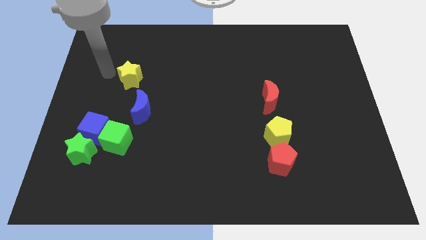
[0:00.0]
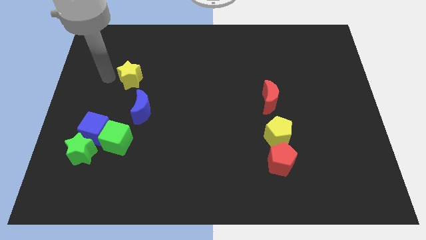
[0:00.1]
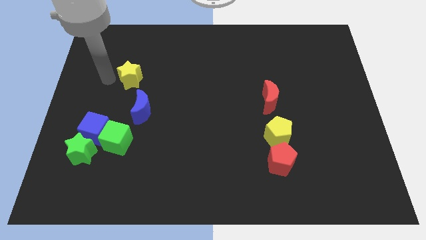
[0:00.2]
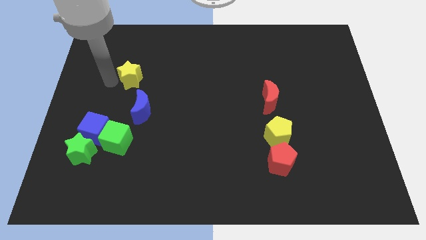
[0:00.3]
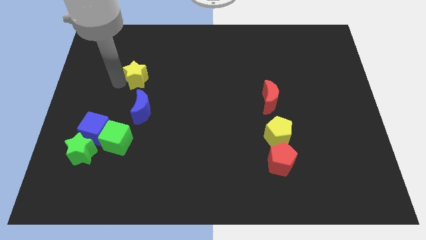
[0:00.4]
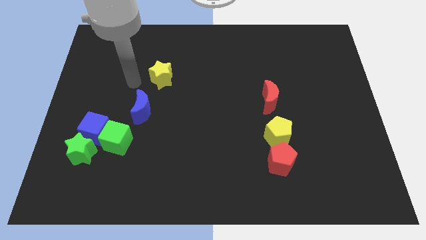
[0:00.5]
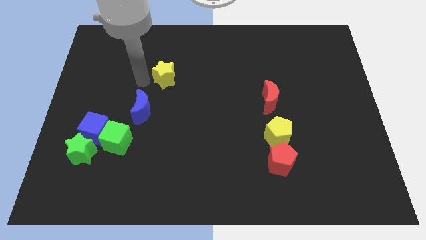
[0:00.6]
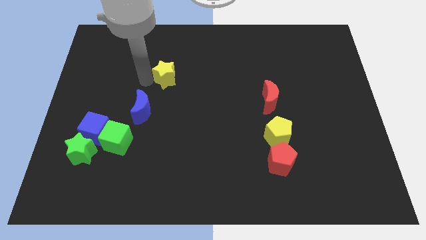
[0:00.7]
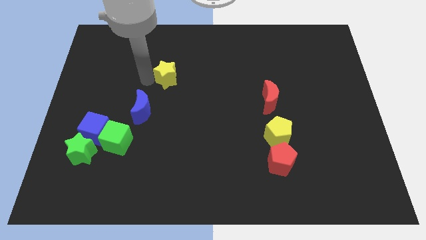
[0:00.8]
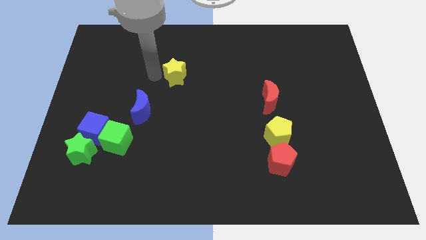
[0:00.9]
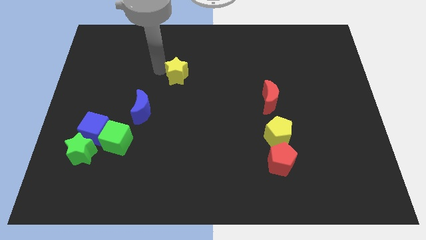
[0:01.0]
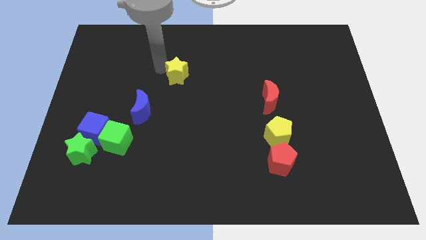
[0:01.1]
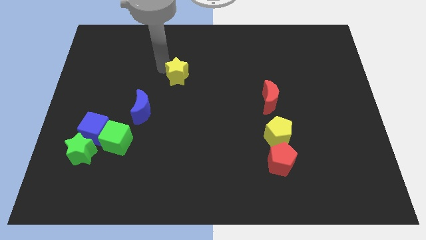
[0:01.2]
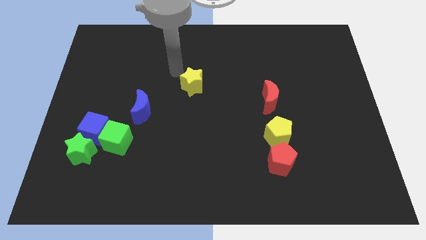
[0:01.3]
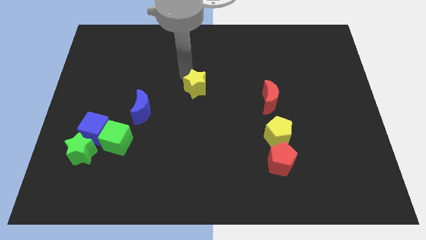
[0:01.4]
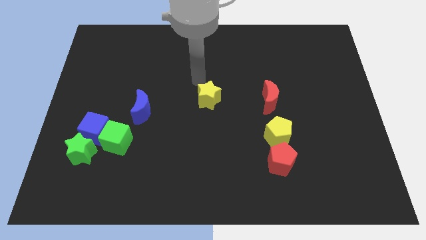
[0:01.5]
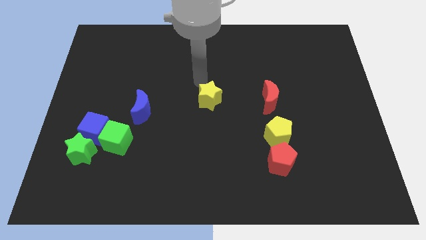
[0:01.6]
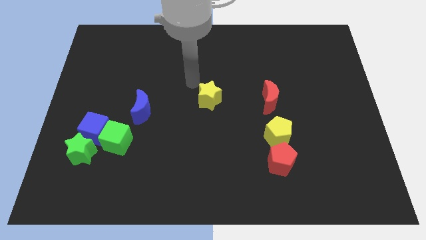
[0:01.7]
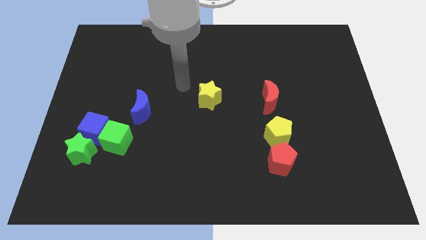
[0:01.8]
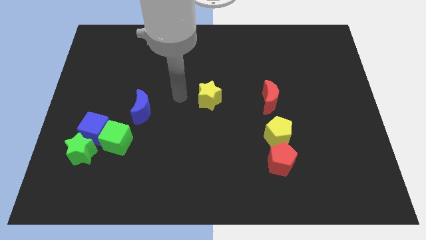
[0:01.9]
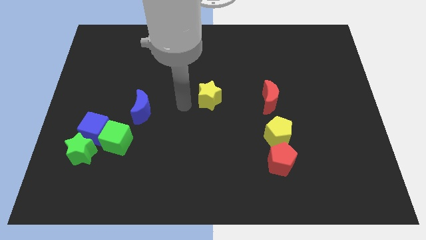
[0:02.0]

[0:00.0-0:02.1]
move the yellow star to the center of the board

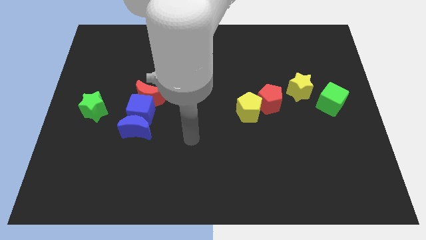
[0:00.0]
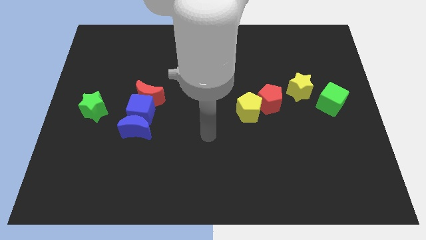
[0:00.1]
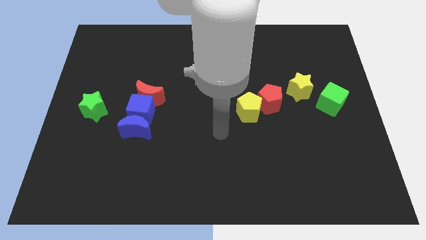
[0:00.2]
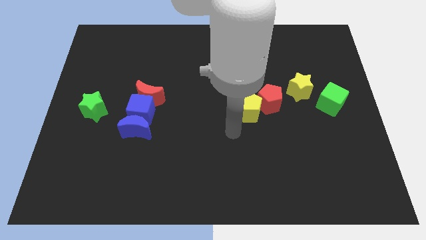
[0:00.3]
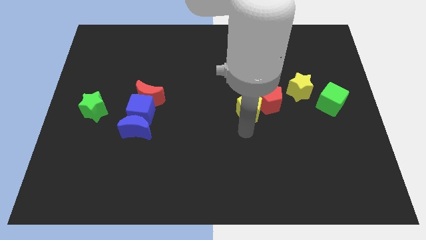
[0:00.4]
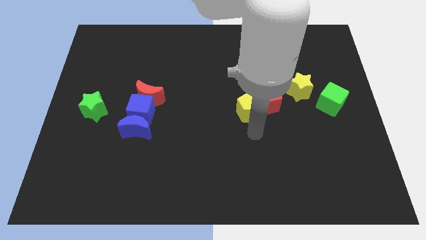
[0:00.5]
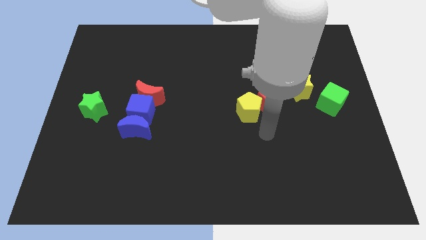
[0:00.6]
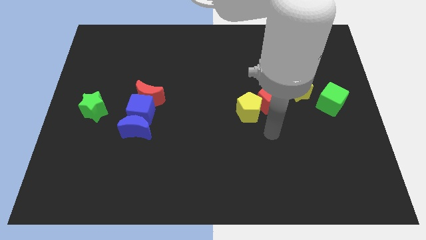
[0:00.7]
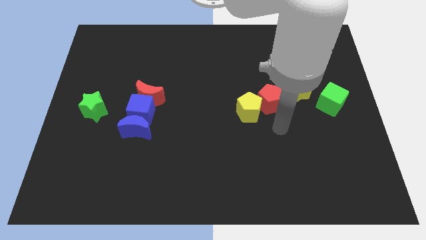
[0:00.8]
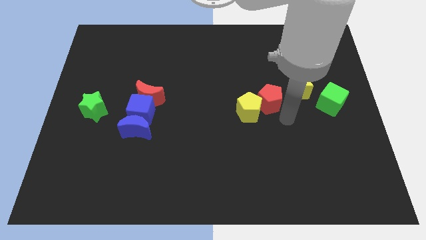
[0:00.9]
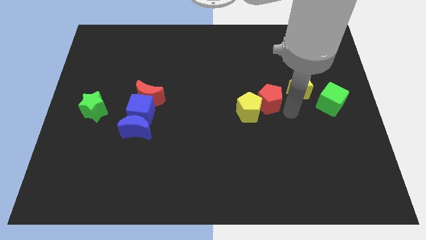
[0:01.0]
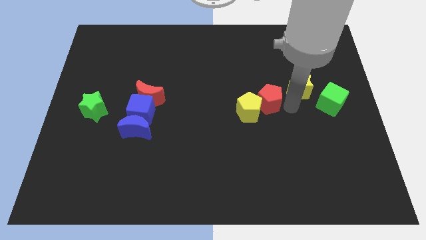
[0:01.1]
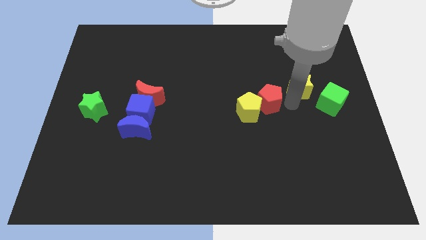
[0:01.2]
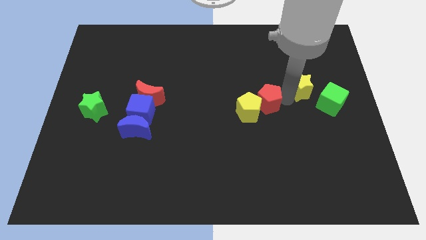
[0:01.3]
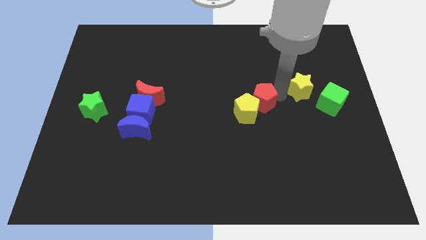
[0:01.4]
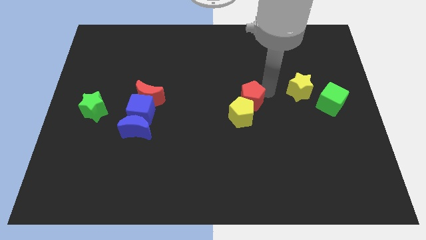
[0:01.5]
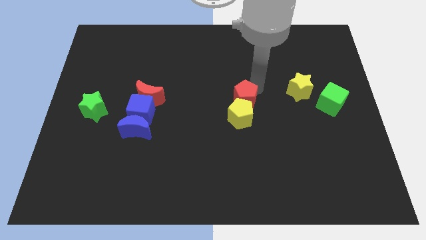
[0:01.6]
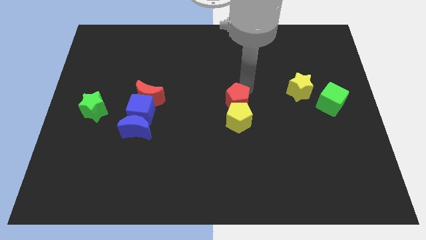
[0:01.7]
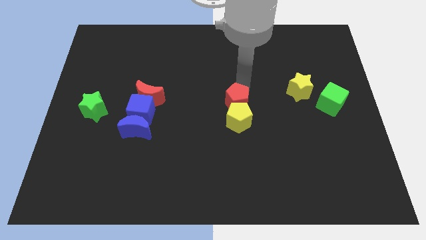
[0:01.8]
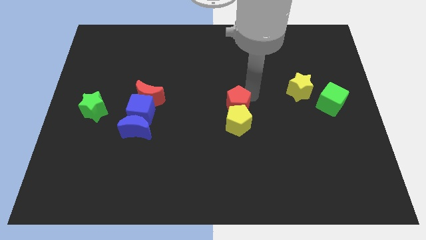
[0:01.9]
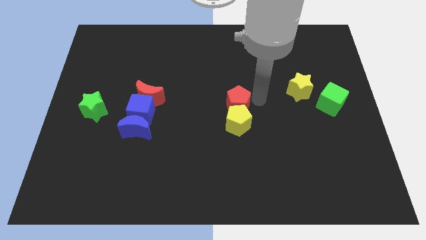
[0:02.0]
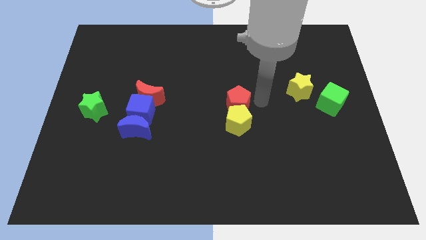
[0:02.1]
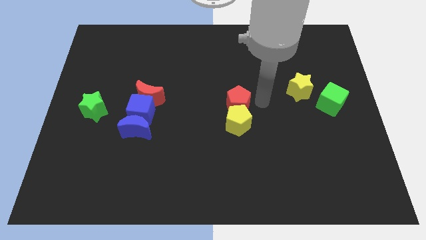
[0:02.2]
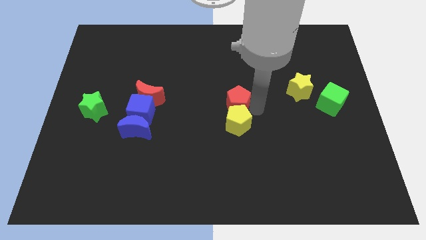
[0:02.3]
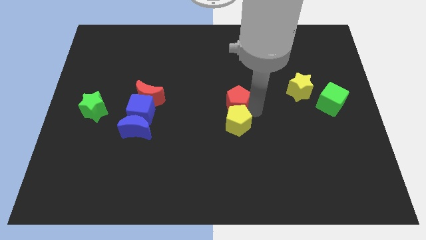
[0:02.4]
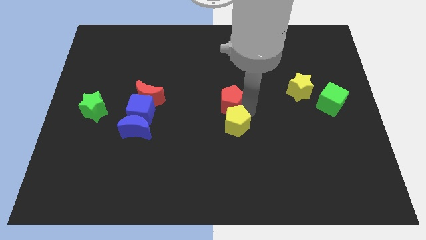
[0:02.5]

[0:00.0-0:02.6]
push the red pentagon away from yellow star

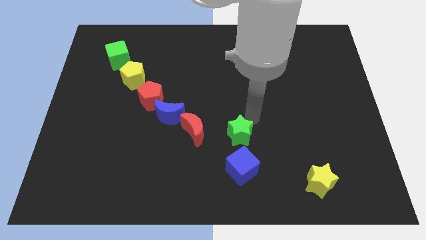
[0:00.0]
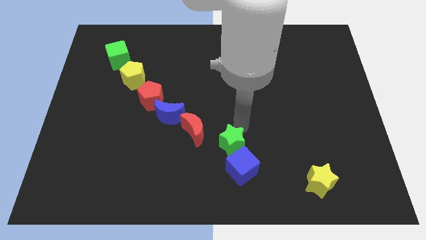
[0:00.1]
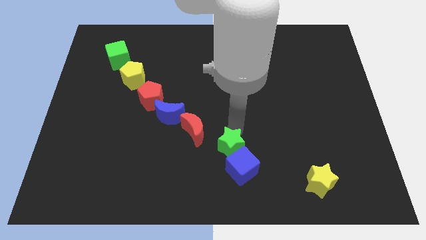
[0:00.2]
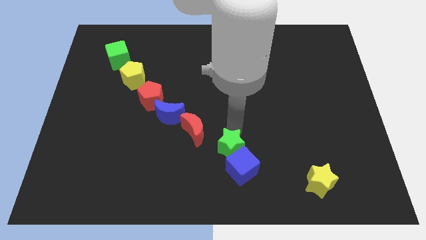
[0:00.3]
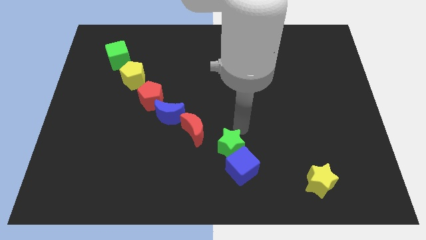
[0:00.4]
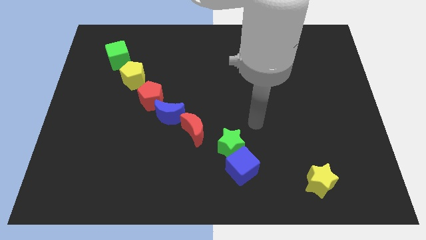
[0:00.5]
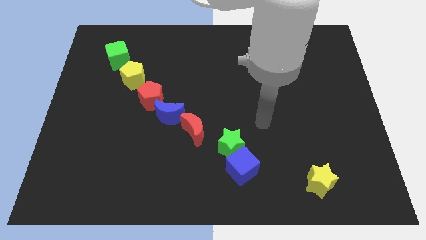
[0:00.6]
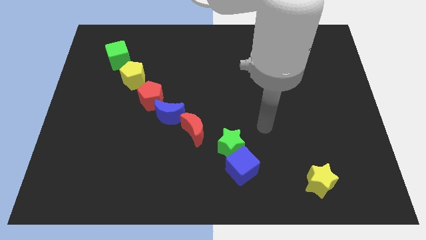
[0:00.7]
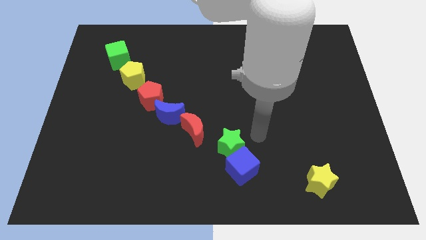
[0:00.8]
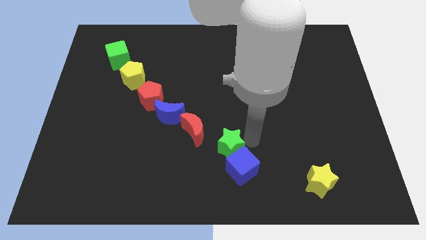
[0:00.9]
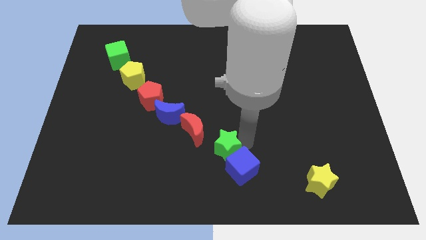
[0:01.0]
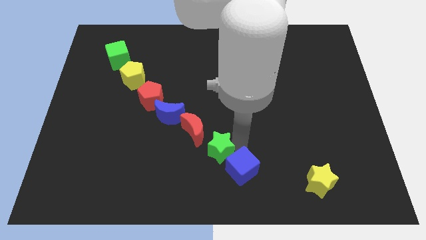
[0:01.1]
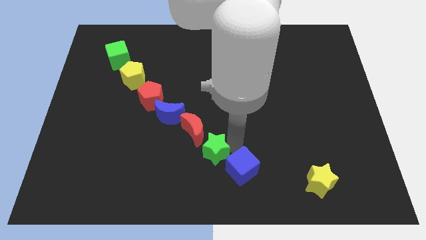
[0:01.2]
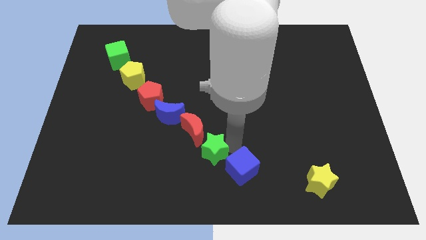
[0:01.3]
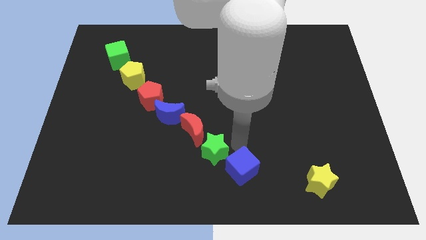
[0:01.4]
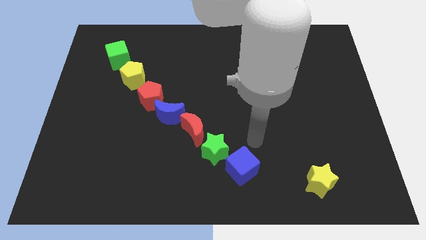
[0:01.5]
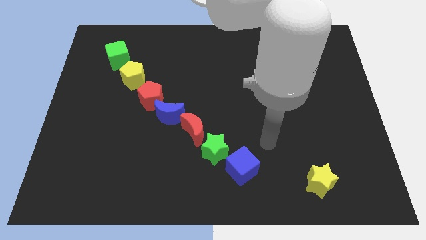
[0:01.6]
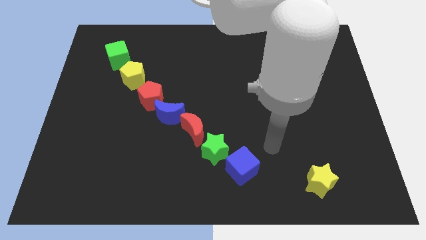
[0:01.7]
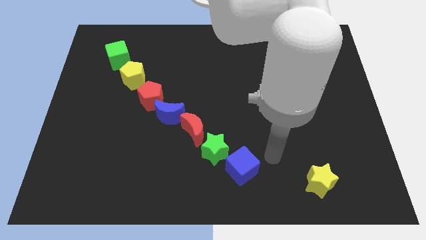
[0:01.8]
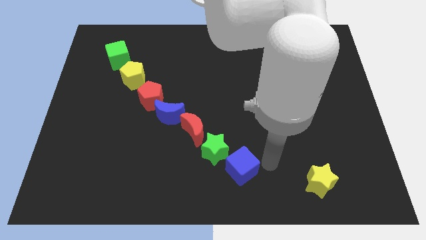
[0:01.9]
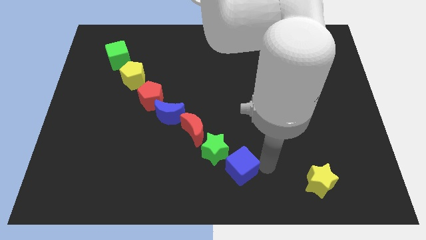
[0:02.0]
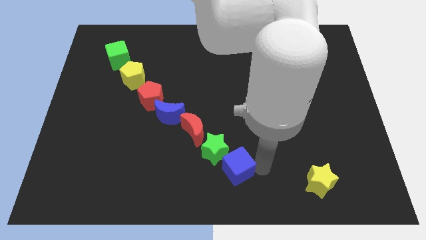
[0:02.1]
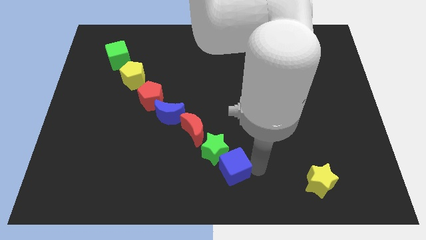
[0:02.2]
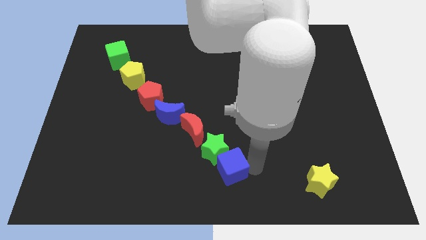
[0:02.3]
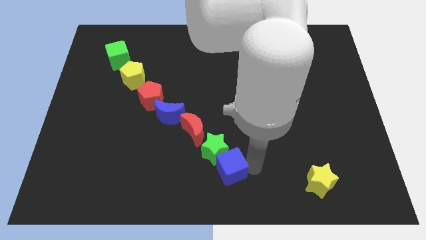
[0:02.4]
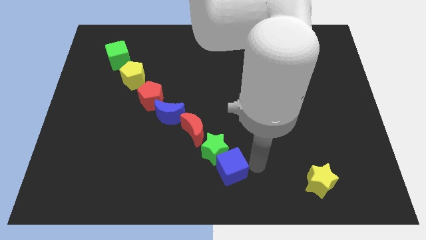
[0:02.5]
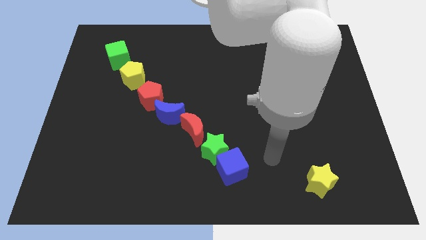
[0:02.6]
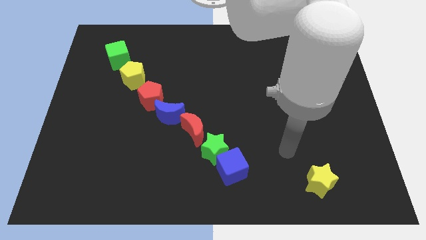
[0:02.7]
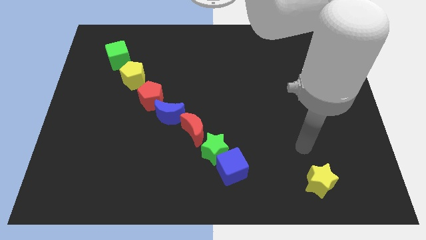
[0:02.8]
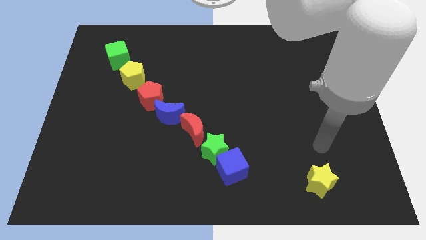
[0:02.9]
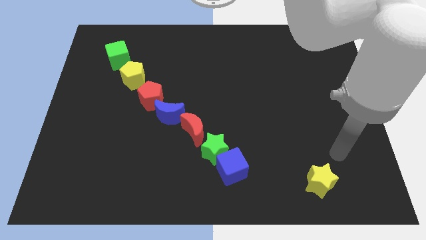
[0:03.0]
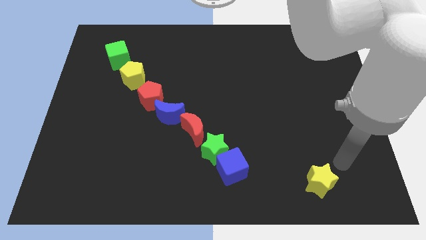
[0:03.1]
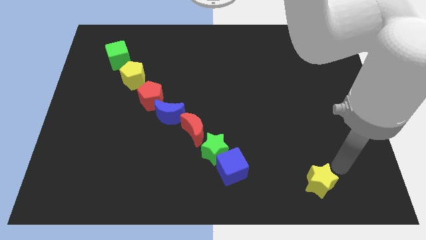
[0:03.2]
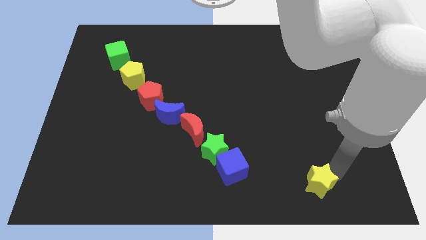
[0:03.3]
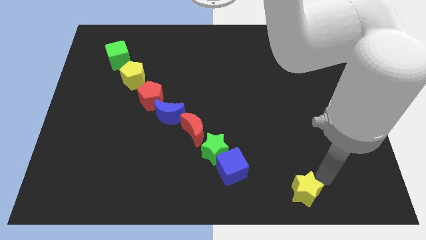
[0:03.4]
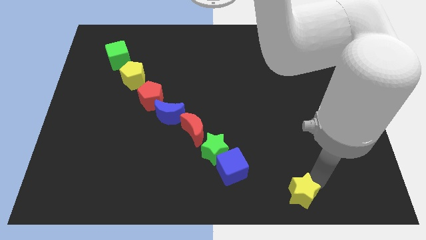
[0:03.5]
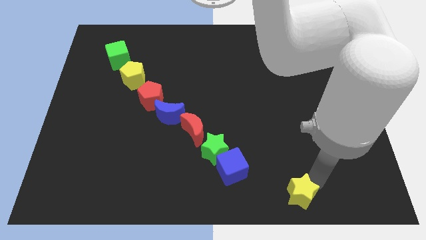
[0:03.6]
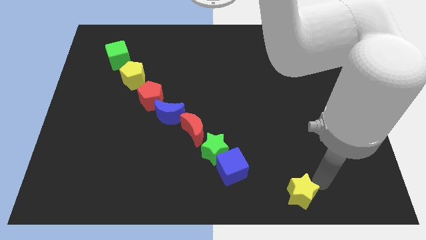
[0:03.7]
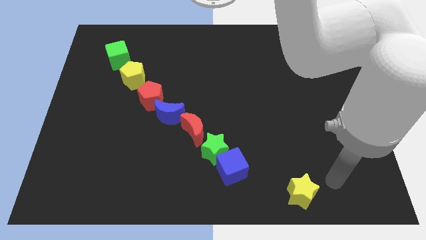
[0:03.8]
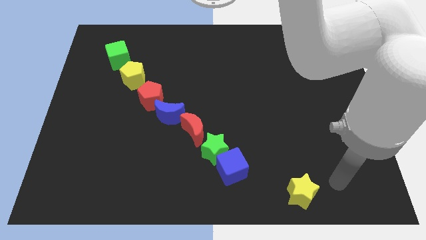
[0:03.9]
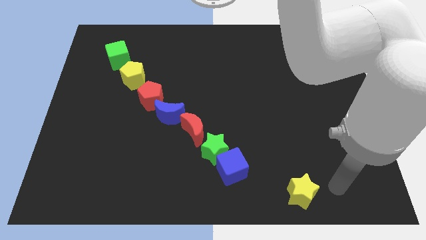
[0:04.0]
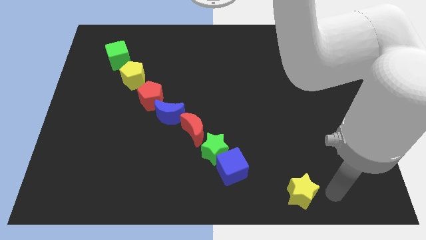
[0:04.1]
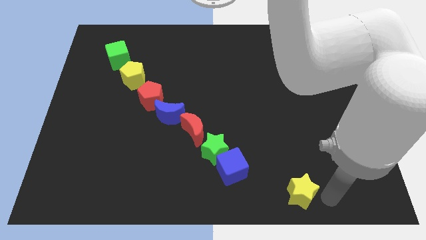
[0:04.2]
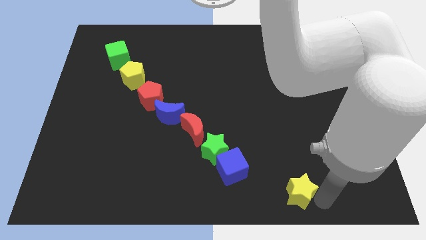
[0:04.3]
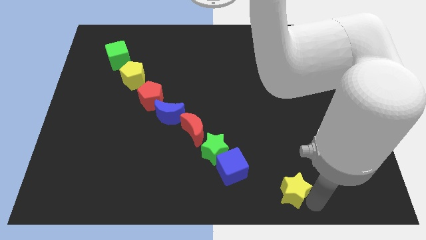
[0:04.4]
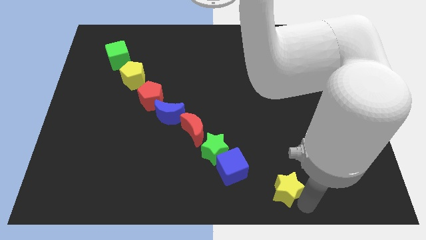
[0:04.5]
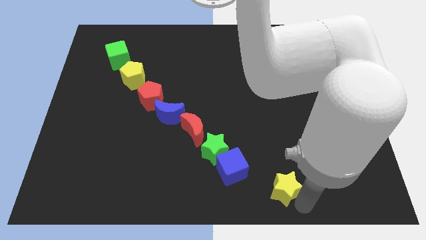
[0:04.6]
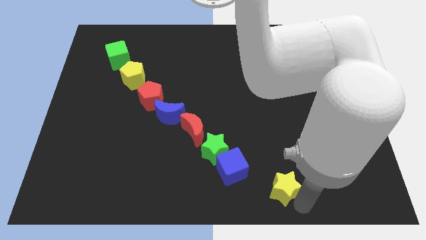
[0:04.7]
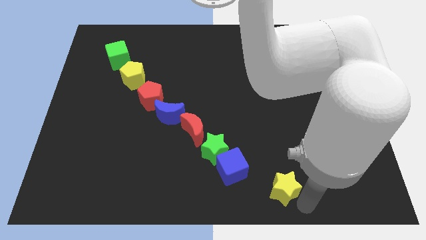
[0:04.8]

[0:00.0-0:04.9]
place the yellow star diagonally to the bottom right of the blue cube
